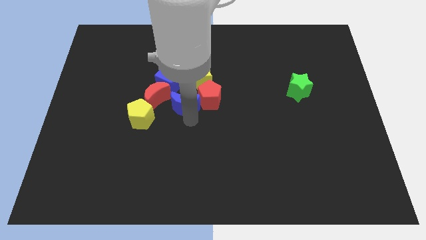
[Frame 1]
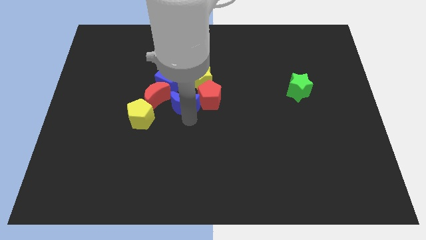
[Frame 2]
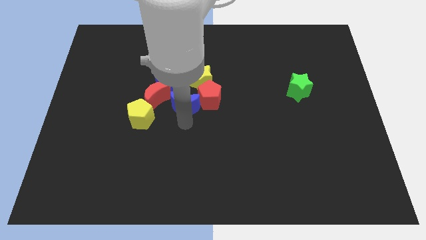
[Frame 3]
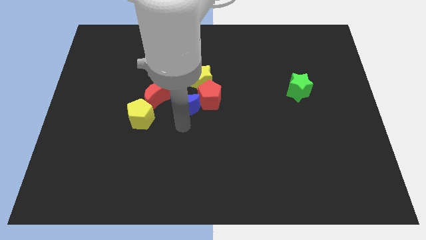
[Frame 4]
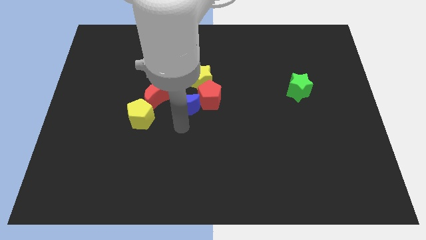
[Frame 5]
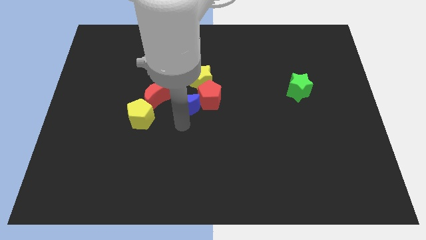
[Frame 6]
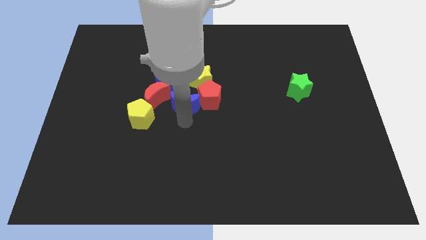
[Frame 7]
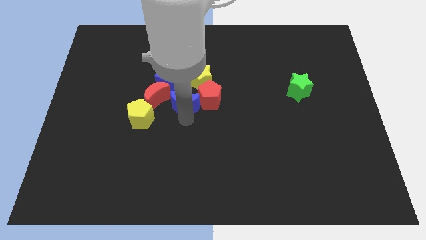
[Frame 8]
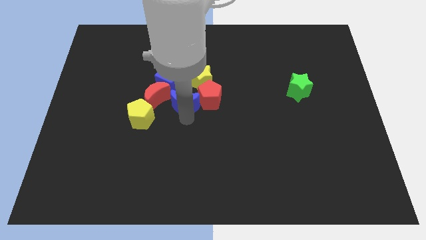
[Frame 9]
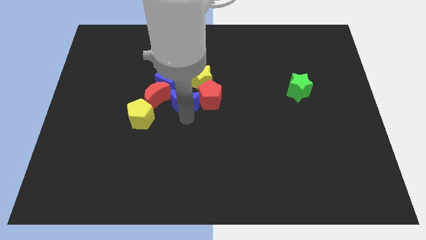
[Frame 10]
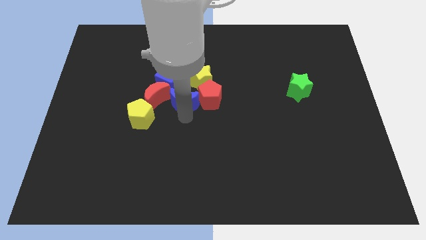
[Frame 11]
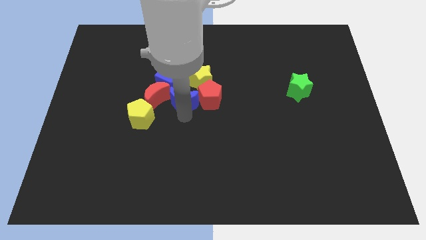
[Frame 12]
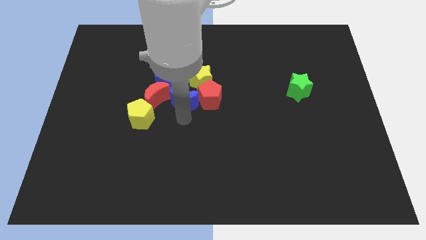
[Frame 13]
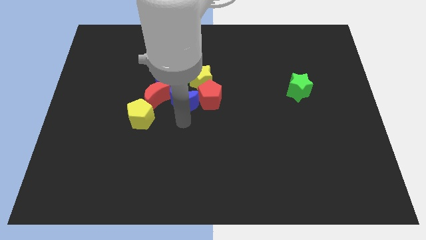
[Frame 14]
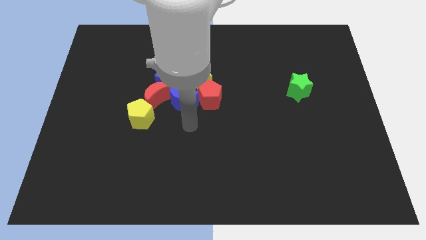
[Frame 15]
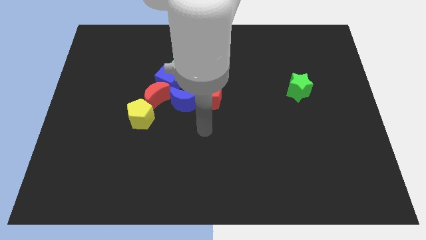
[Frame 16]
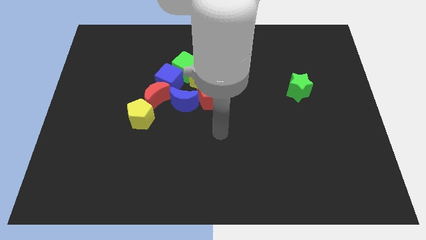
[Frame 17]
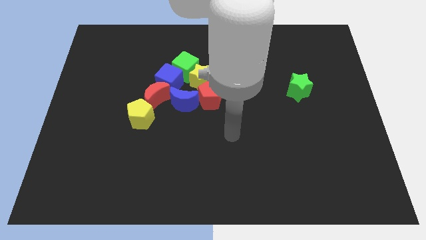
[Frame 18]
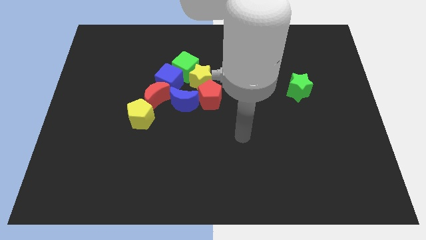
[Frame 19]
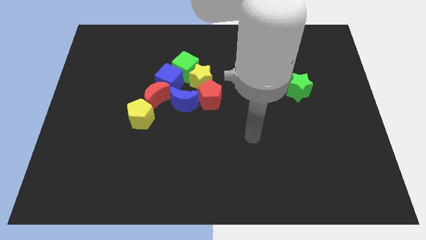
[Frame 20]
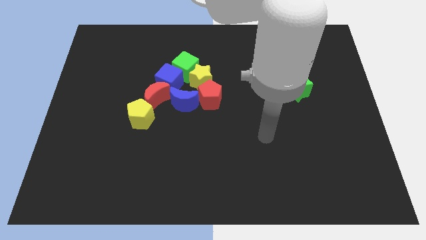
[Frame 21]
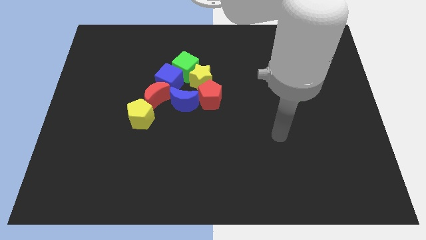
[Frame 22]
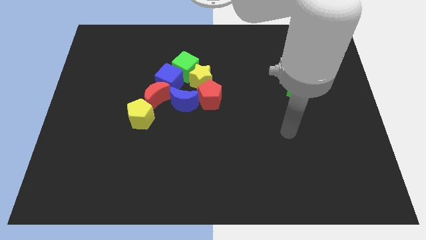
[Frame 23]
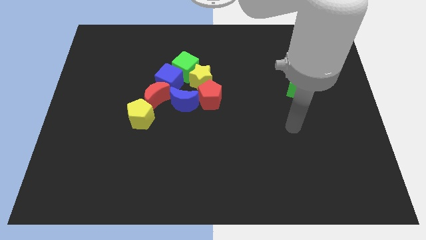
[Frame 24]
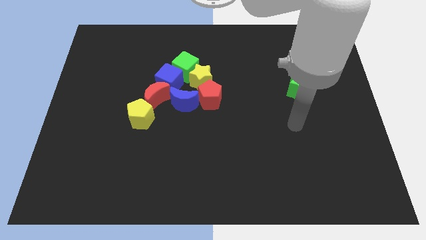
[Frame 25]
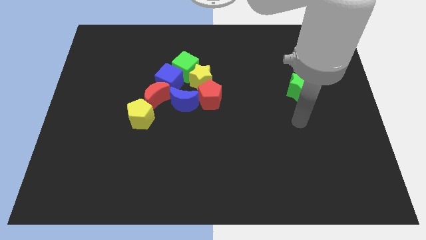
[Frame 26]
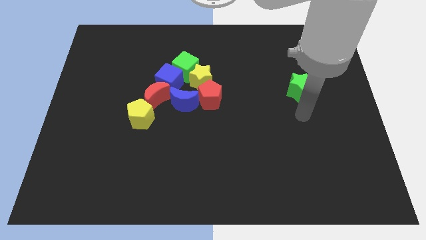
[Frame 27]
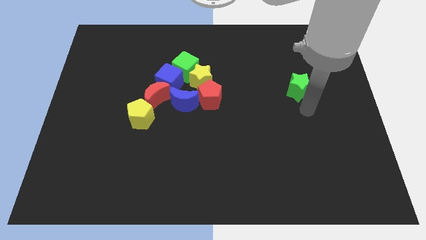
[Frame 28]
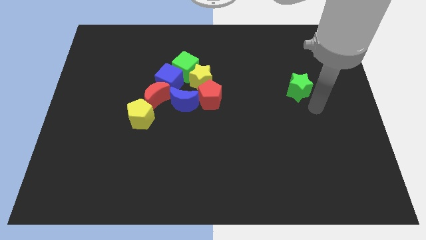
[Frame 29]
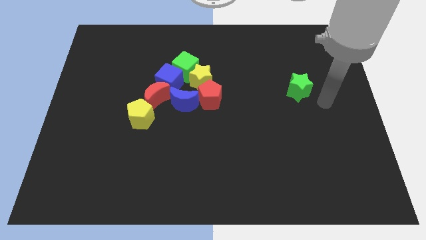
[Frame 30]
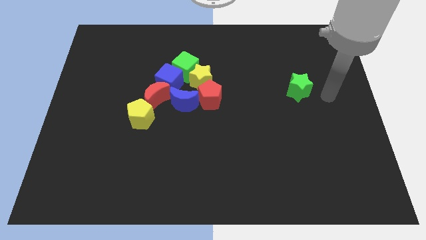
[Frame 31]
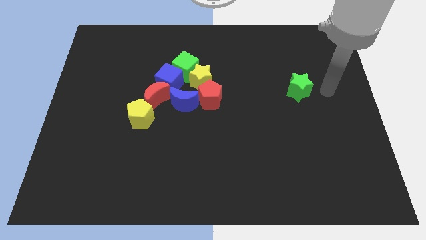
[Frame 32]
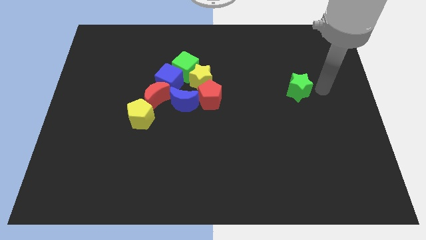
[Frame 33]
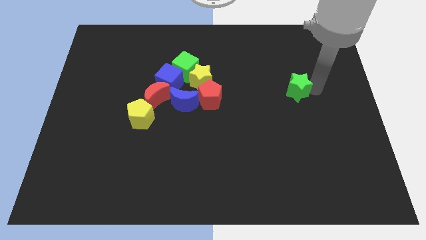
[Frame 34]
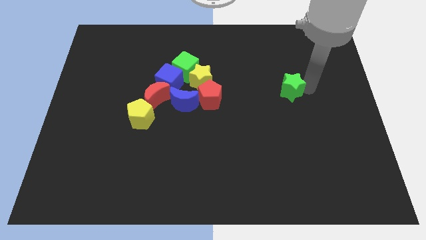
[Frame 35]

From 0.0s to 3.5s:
move the arm right to the green star

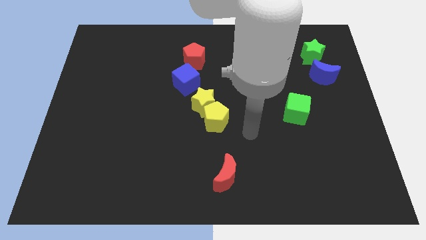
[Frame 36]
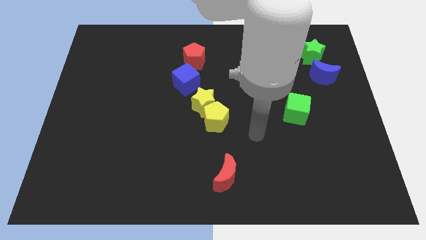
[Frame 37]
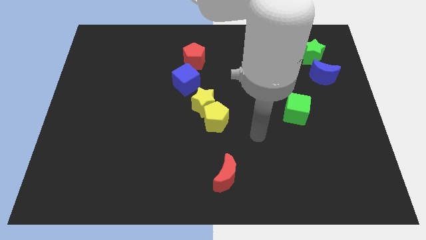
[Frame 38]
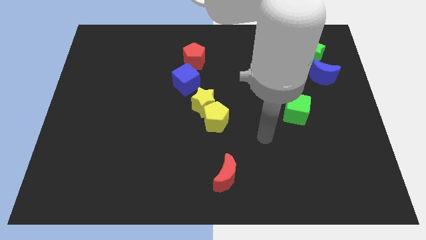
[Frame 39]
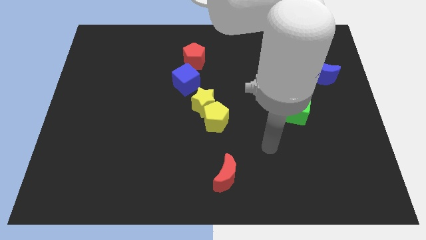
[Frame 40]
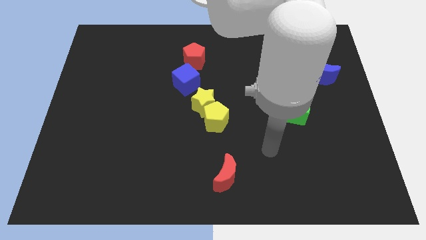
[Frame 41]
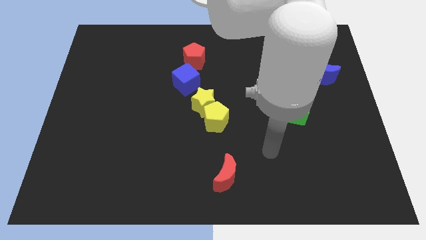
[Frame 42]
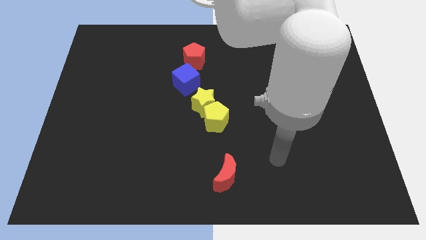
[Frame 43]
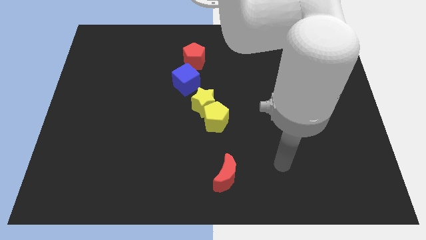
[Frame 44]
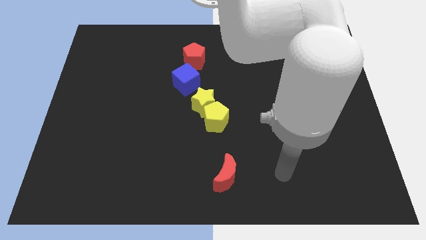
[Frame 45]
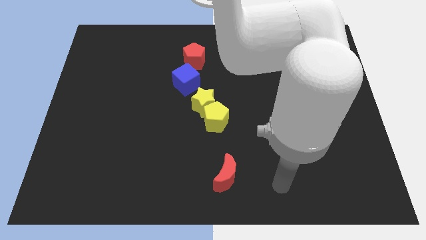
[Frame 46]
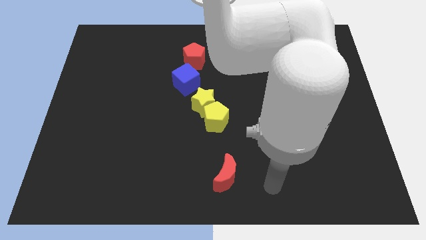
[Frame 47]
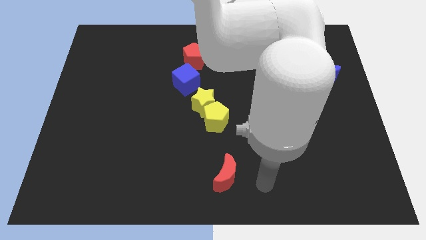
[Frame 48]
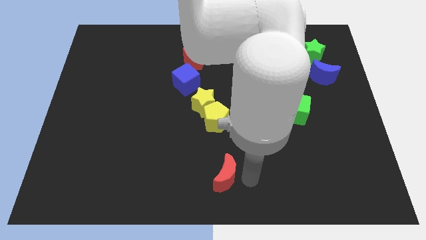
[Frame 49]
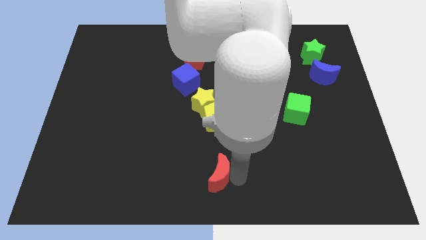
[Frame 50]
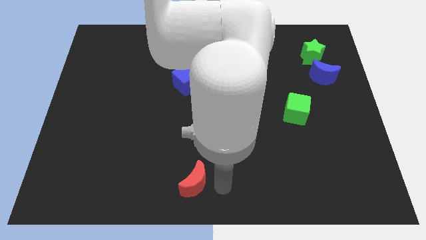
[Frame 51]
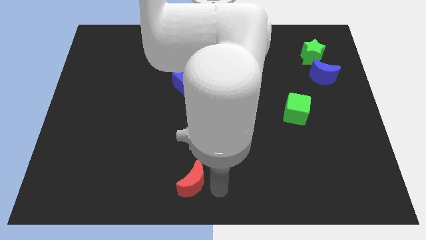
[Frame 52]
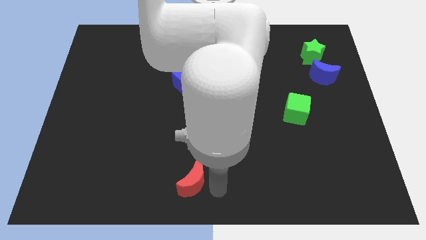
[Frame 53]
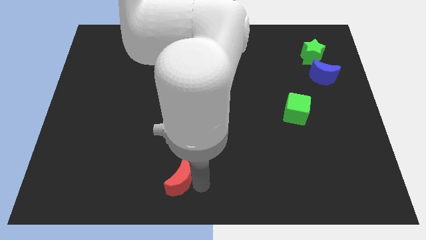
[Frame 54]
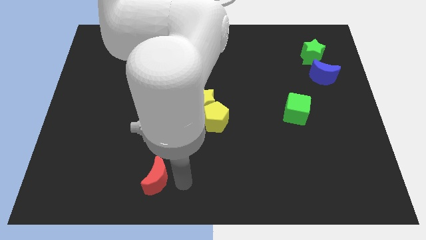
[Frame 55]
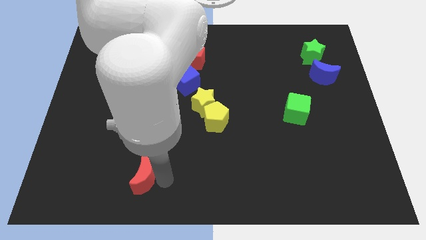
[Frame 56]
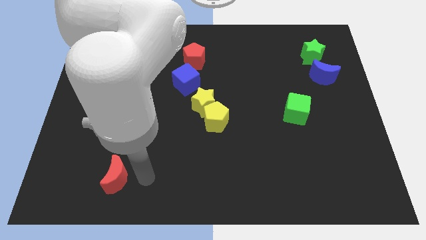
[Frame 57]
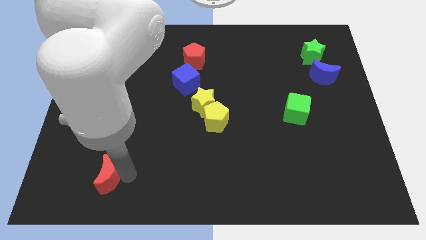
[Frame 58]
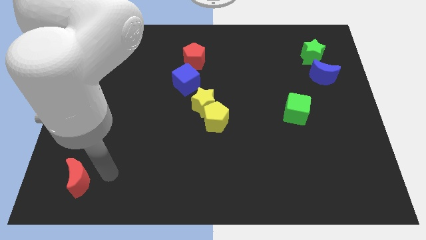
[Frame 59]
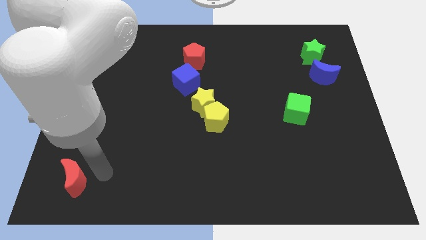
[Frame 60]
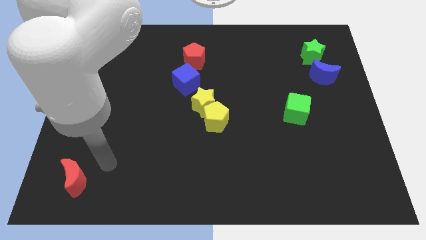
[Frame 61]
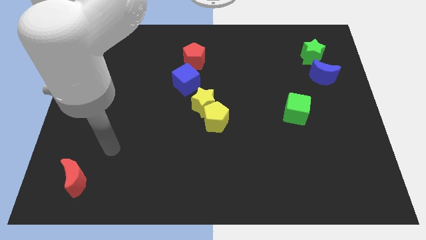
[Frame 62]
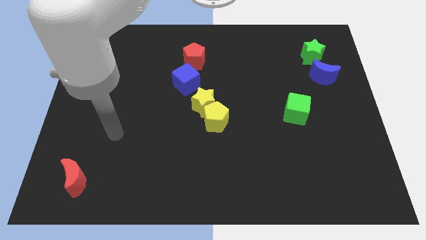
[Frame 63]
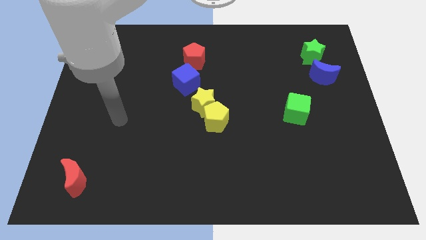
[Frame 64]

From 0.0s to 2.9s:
push the red moon towards the bottom left corner

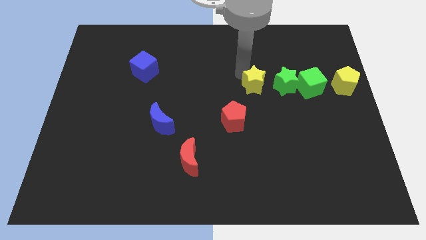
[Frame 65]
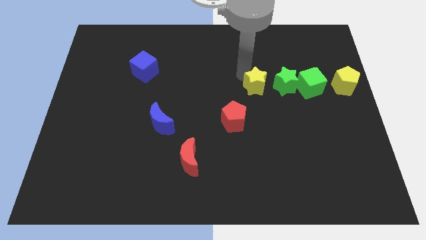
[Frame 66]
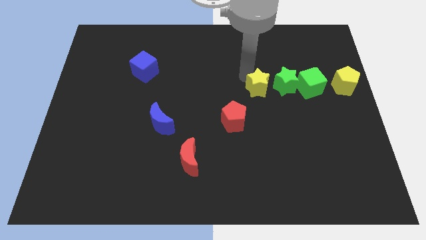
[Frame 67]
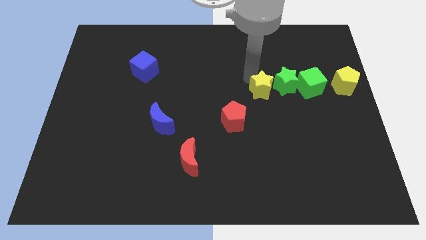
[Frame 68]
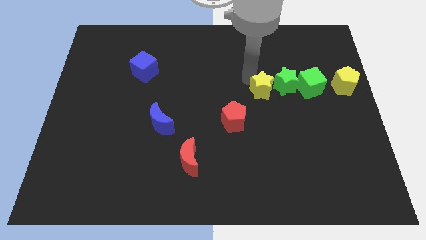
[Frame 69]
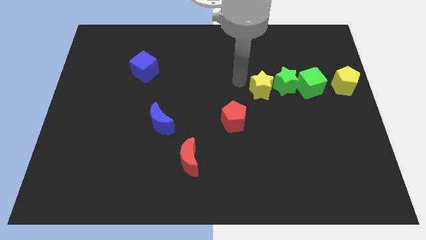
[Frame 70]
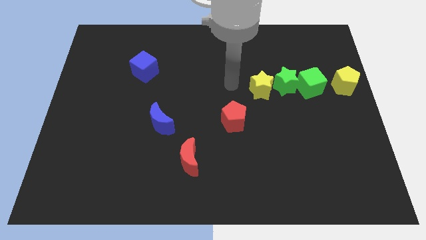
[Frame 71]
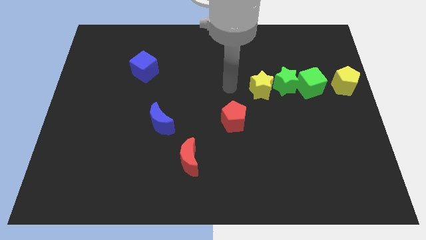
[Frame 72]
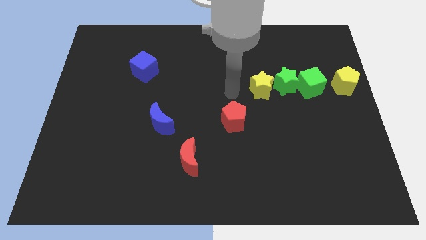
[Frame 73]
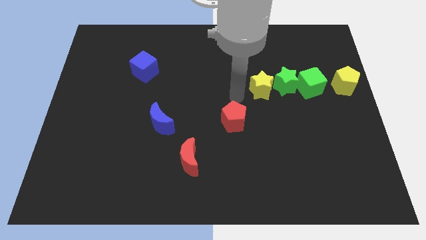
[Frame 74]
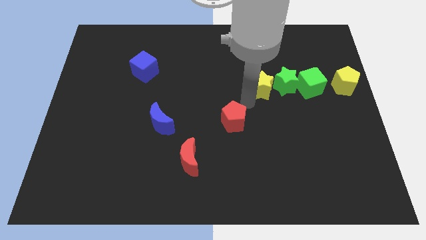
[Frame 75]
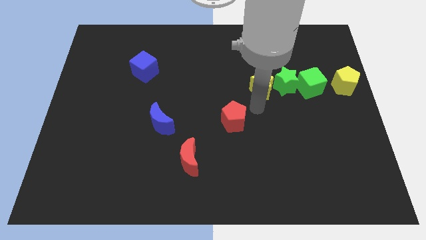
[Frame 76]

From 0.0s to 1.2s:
move arm near red pentagon

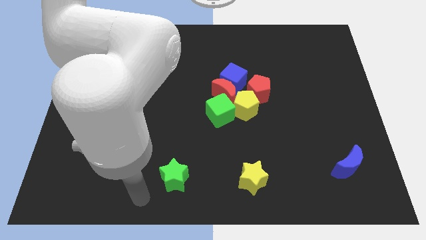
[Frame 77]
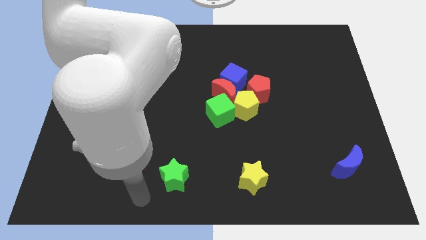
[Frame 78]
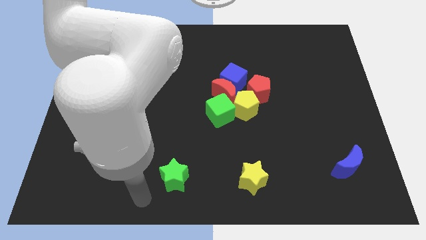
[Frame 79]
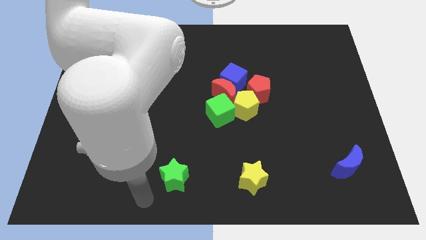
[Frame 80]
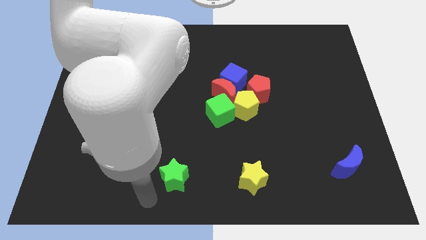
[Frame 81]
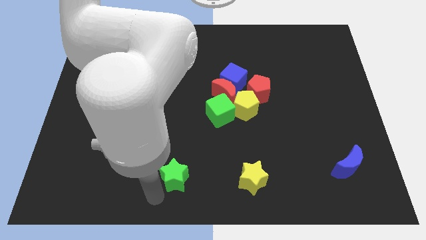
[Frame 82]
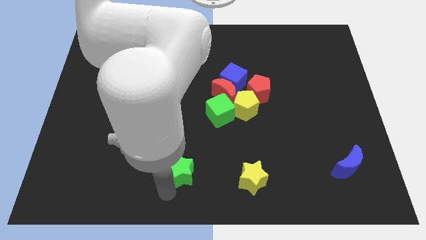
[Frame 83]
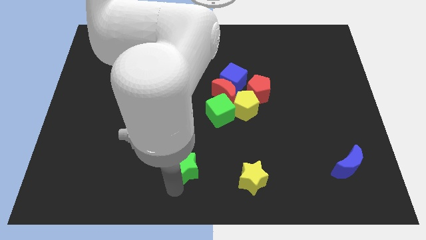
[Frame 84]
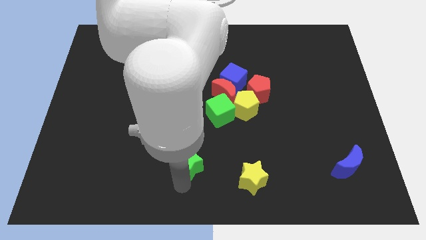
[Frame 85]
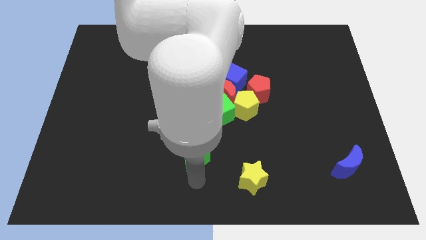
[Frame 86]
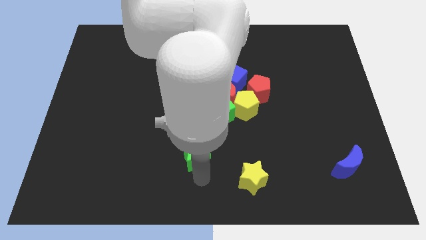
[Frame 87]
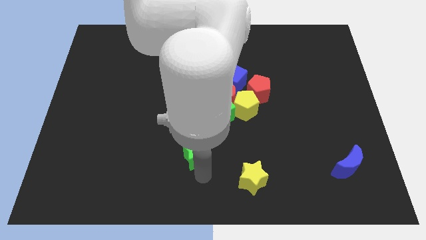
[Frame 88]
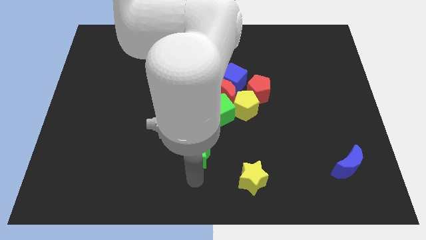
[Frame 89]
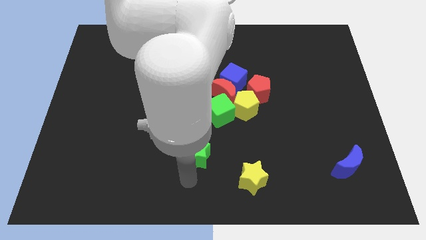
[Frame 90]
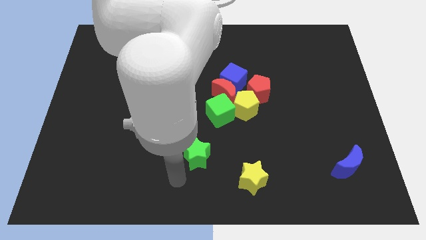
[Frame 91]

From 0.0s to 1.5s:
move the green star towards the top
